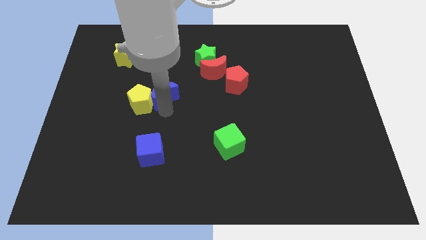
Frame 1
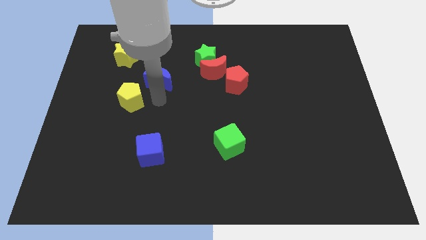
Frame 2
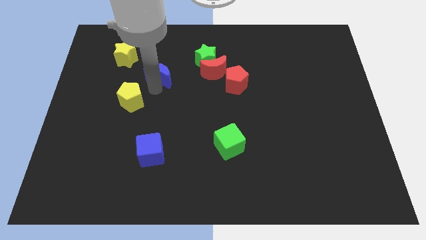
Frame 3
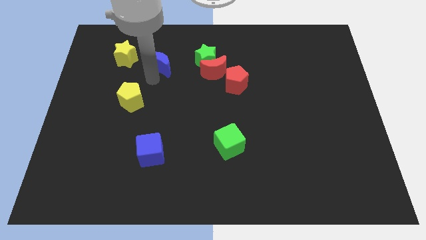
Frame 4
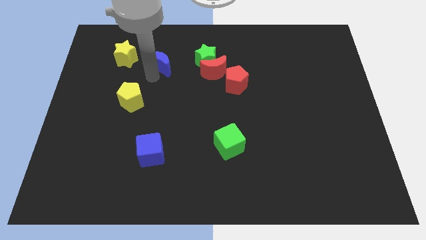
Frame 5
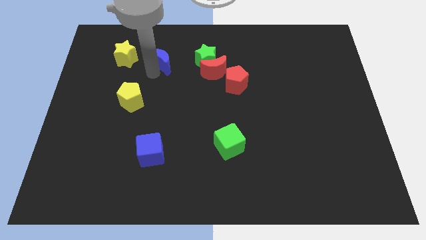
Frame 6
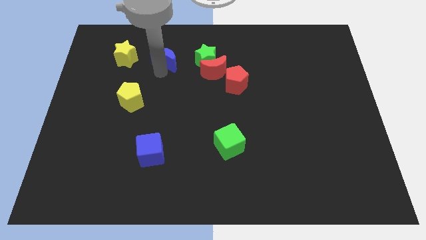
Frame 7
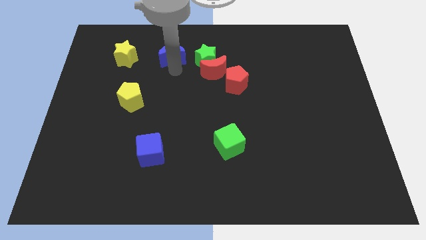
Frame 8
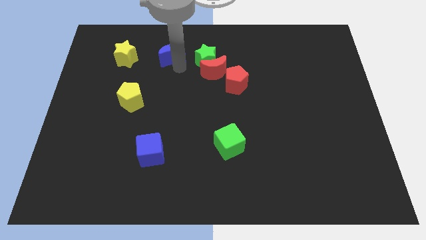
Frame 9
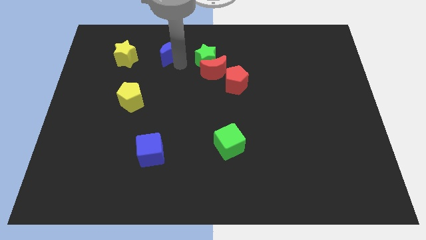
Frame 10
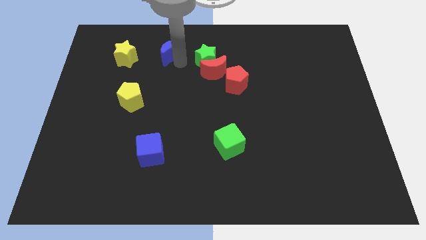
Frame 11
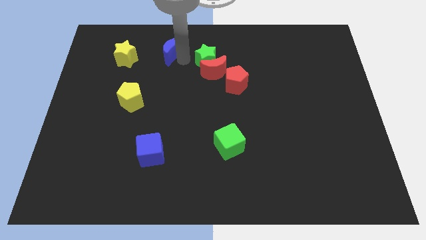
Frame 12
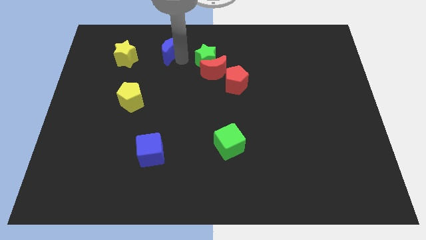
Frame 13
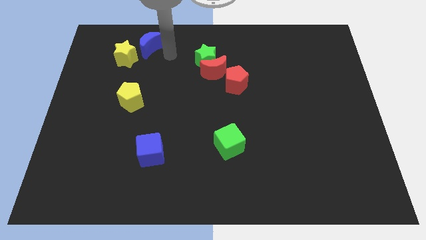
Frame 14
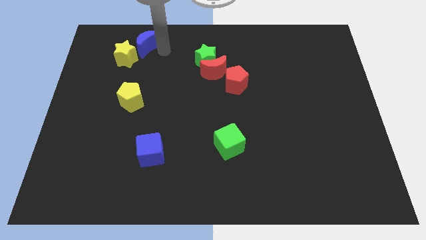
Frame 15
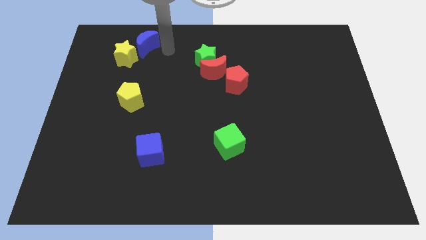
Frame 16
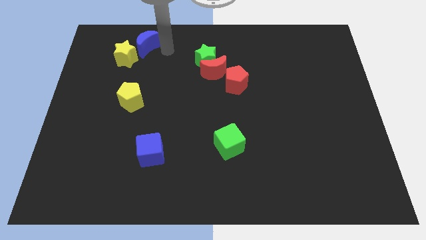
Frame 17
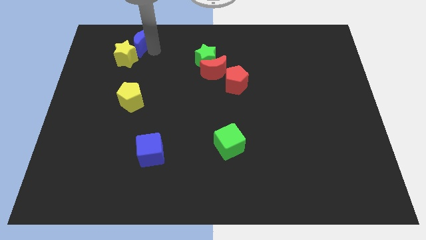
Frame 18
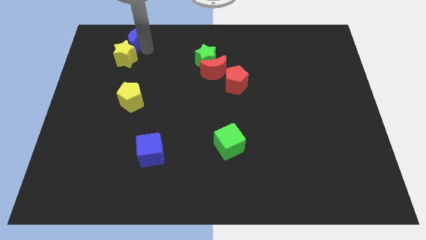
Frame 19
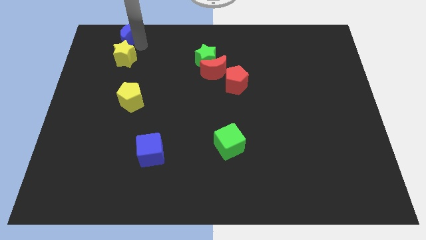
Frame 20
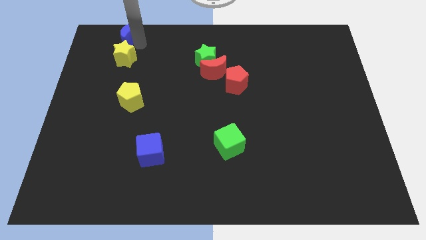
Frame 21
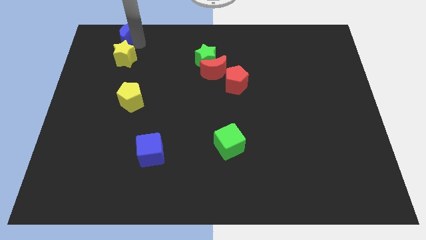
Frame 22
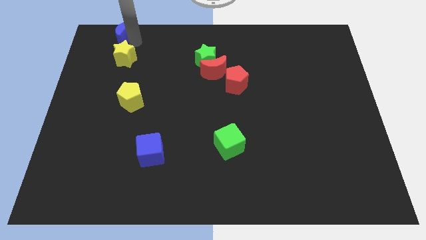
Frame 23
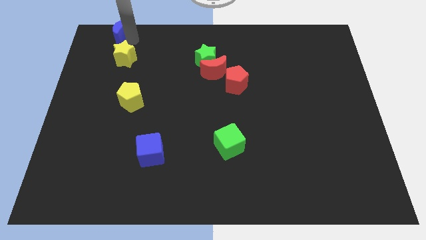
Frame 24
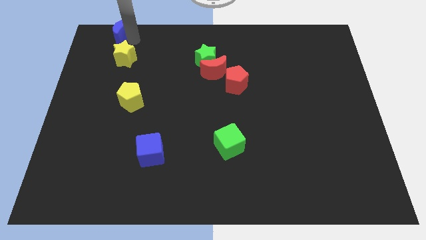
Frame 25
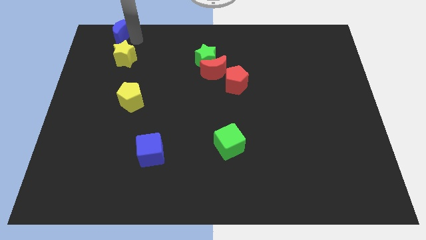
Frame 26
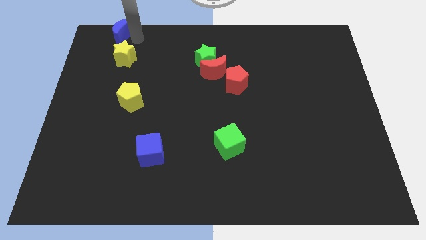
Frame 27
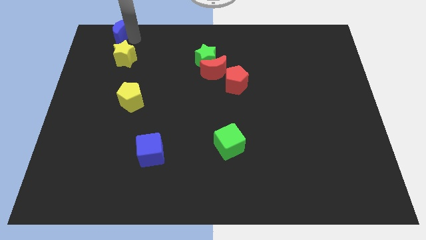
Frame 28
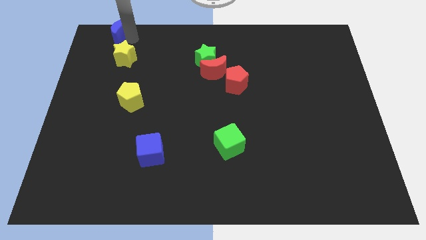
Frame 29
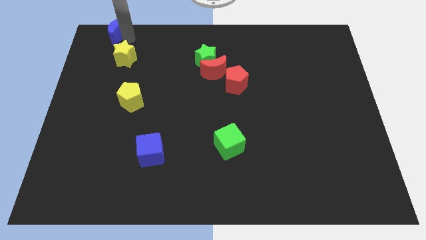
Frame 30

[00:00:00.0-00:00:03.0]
place the blue moon above the yellow star

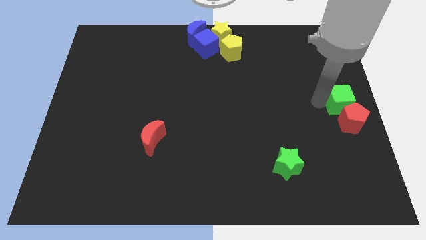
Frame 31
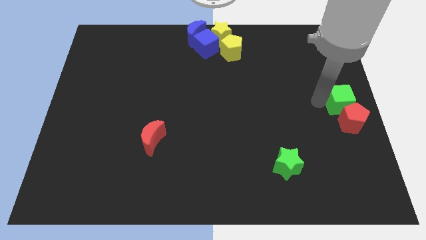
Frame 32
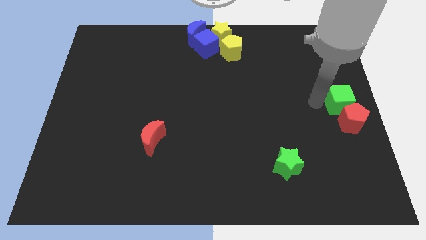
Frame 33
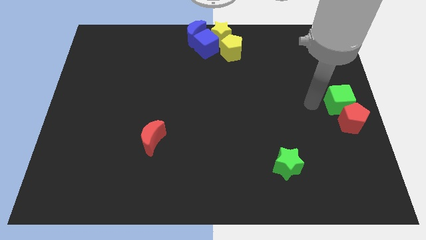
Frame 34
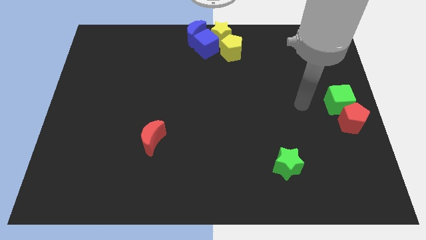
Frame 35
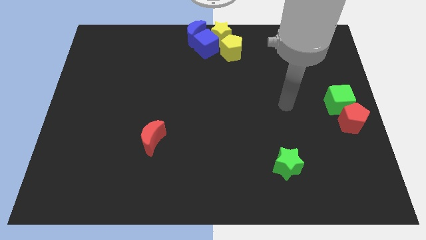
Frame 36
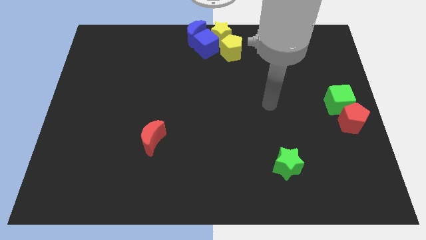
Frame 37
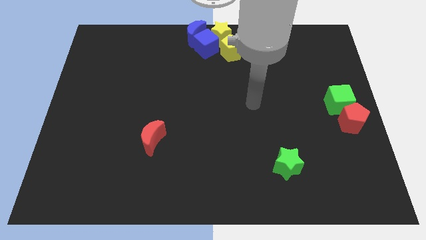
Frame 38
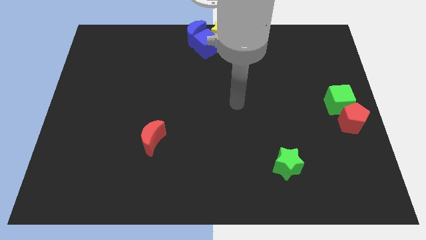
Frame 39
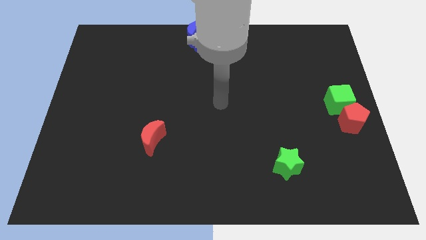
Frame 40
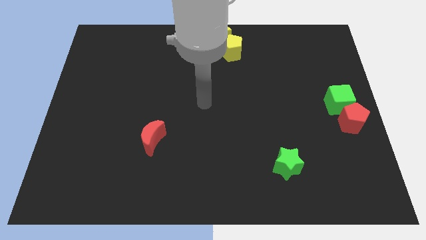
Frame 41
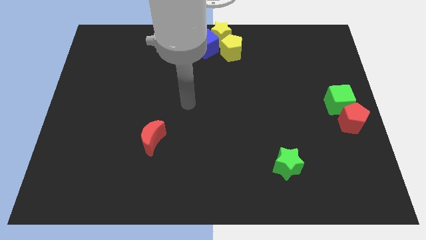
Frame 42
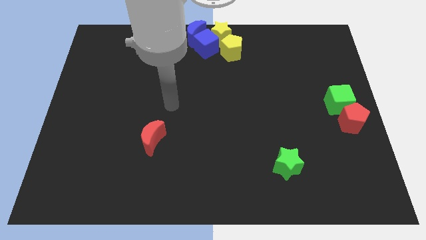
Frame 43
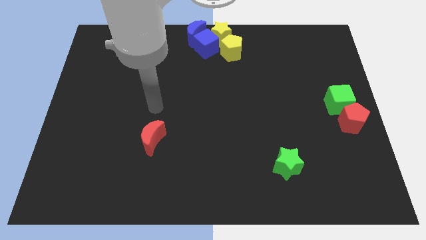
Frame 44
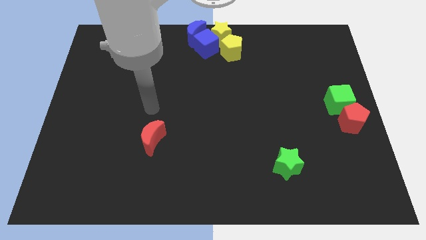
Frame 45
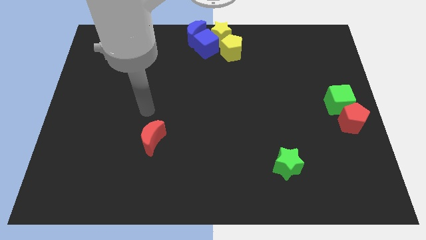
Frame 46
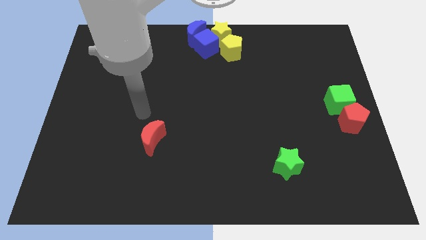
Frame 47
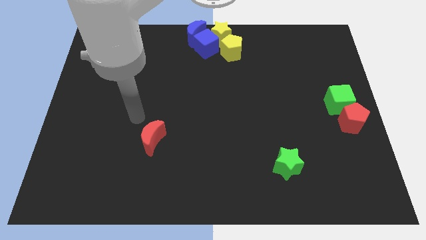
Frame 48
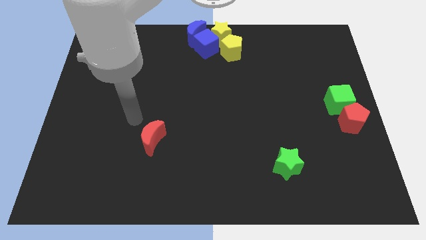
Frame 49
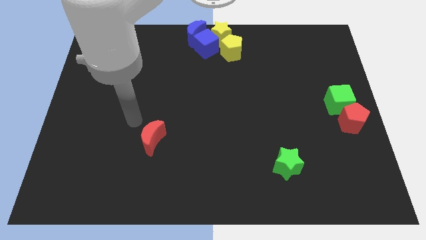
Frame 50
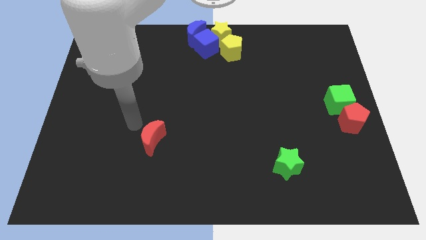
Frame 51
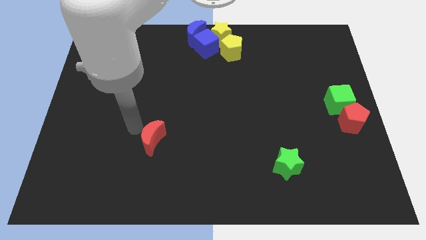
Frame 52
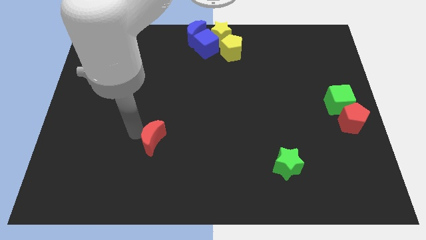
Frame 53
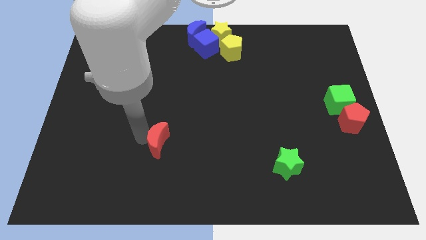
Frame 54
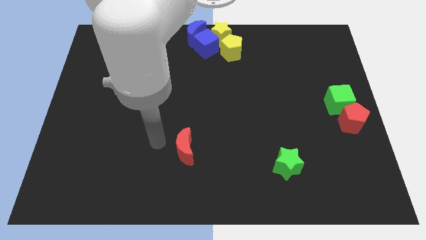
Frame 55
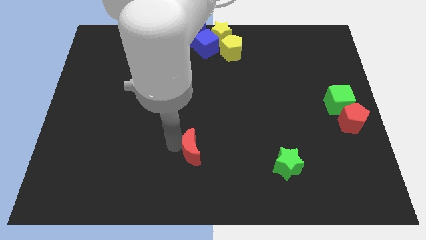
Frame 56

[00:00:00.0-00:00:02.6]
move your arm away from the green cube

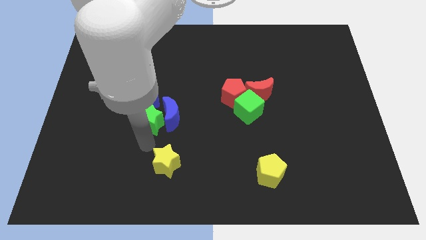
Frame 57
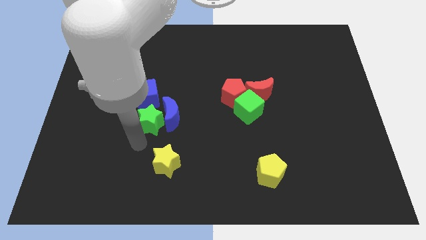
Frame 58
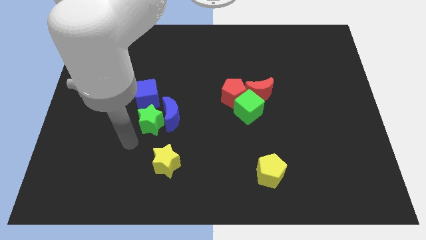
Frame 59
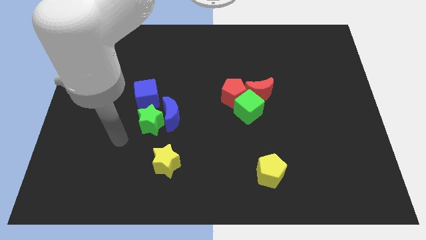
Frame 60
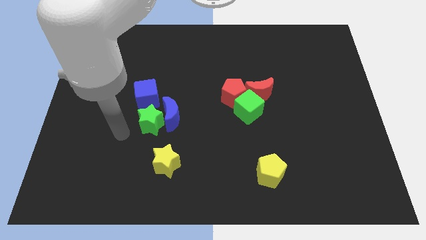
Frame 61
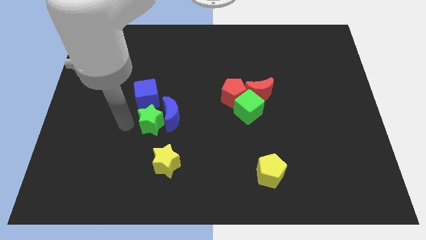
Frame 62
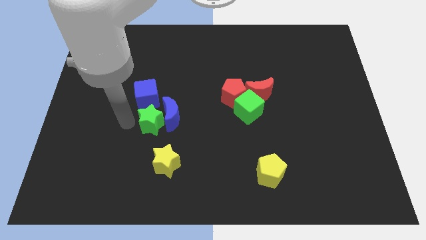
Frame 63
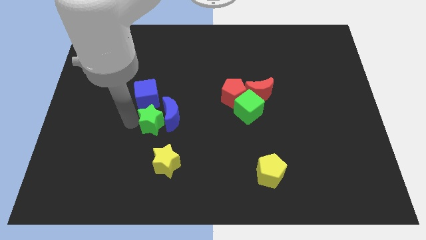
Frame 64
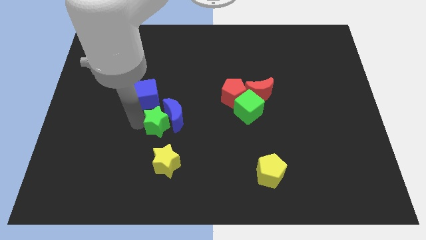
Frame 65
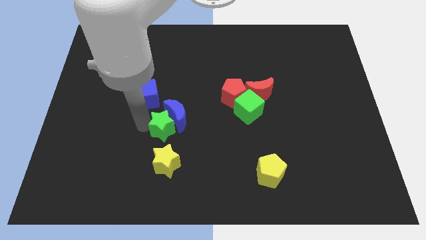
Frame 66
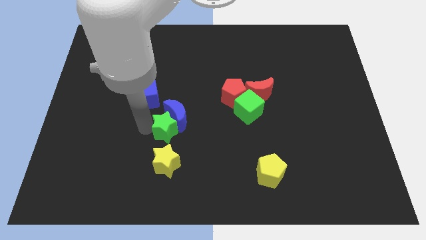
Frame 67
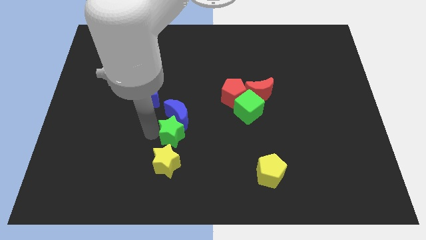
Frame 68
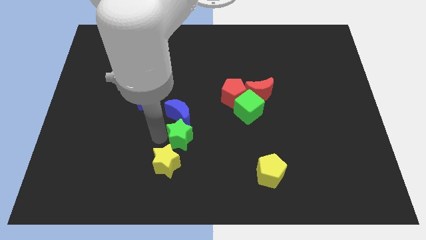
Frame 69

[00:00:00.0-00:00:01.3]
push green star above yellow star

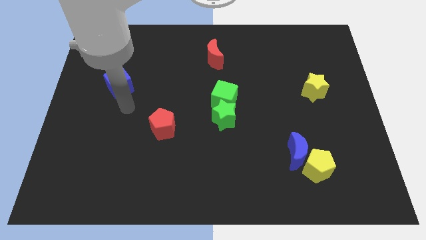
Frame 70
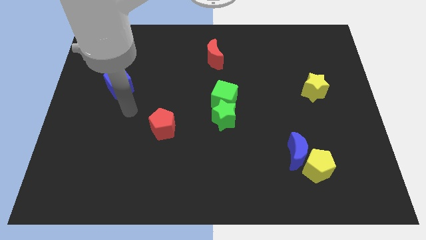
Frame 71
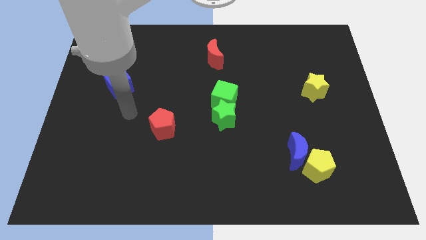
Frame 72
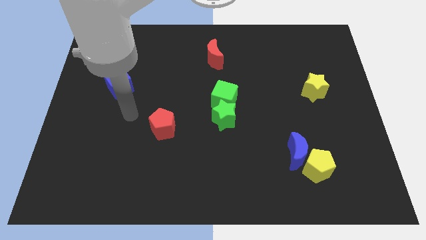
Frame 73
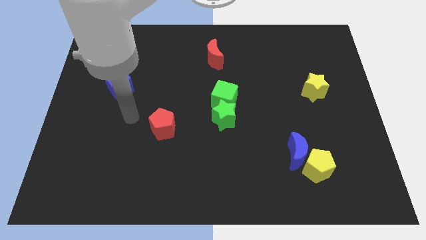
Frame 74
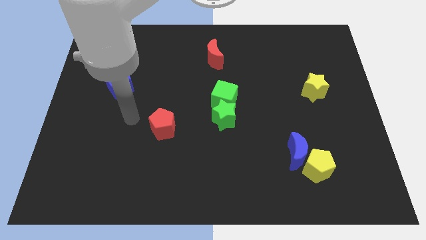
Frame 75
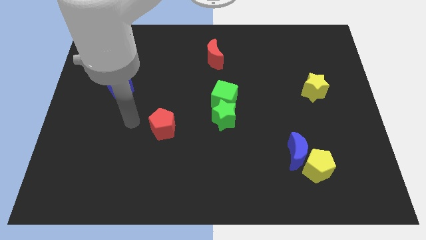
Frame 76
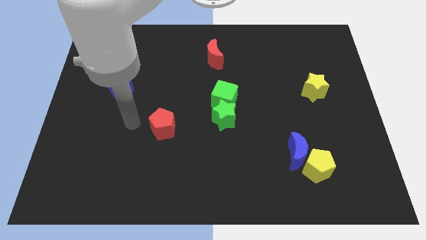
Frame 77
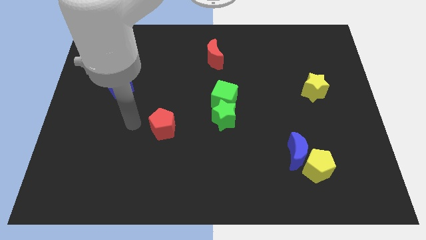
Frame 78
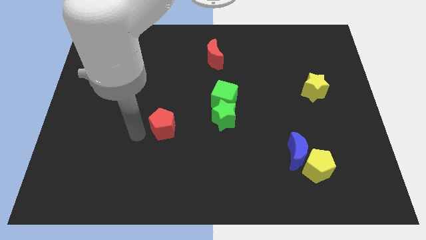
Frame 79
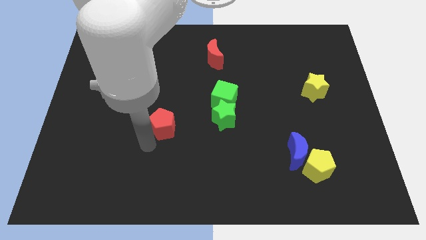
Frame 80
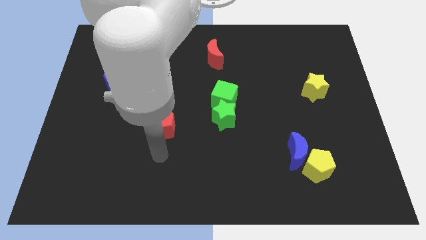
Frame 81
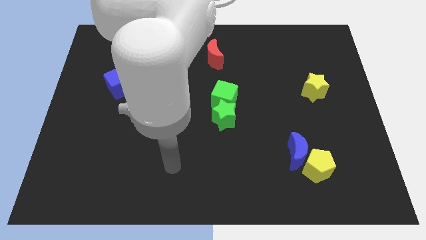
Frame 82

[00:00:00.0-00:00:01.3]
point your hand at the bottom of the red pentagon

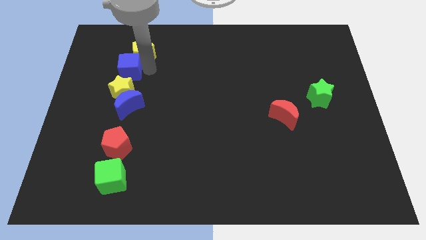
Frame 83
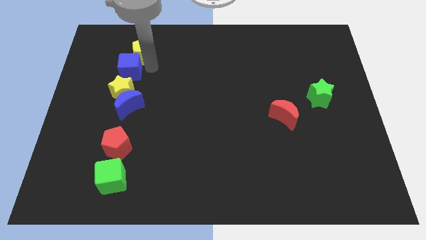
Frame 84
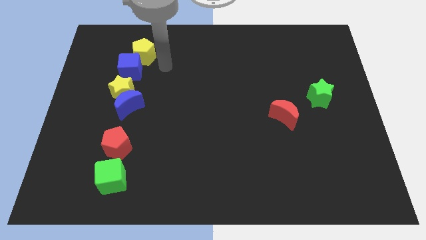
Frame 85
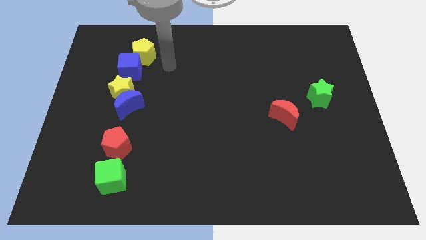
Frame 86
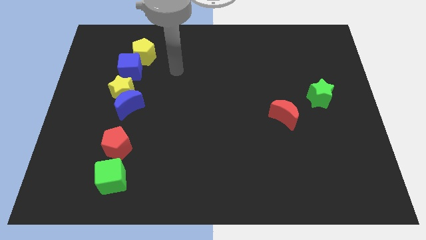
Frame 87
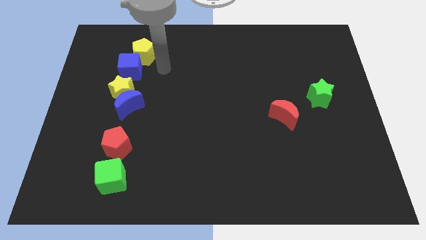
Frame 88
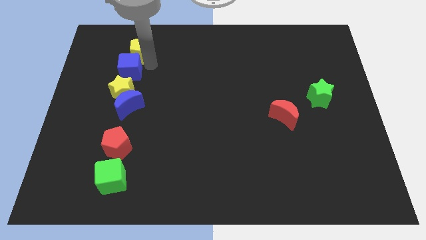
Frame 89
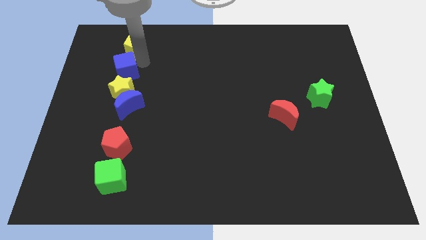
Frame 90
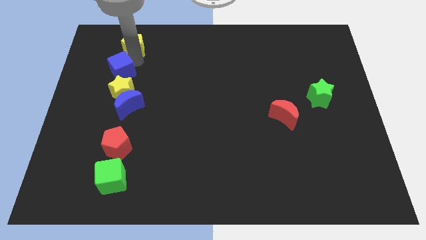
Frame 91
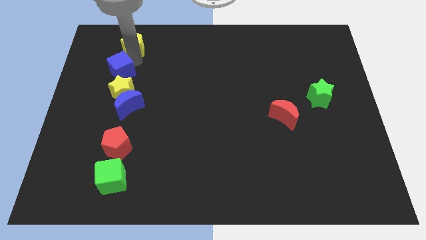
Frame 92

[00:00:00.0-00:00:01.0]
place the yellow pentagon vertically above the blue cube
